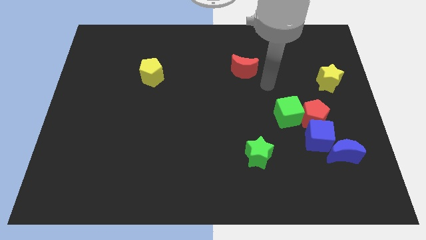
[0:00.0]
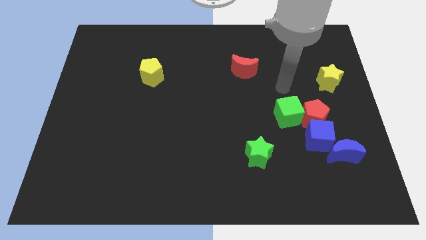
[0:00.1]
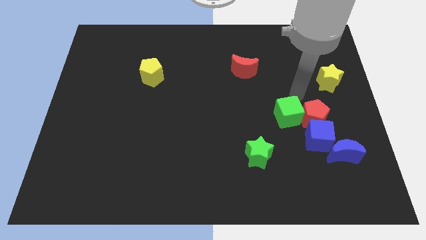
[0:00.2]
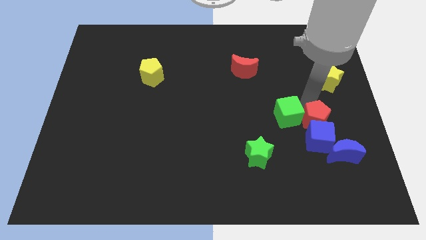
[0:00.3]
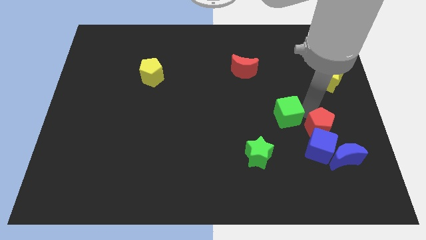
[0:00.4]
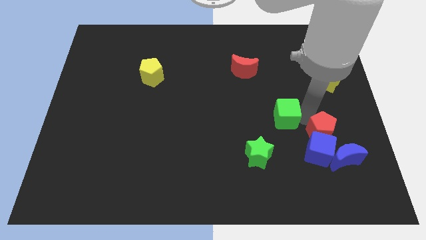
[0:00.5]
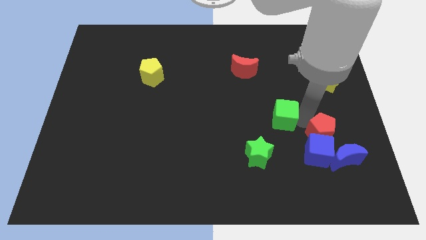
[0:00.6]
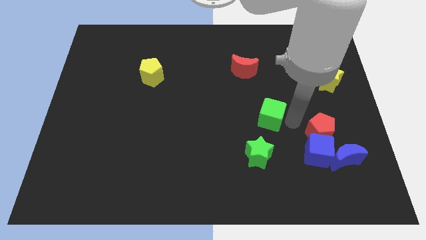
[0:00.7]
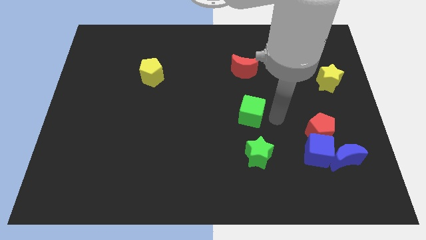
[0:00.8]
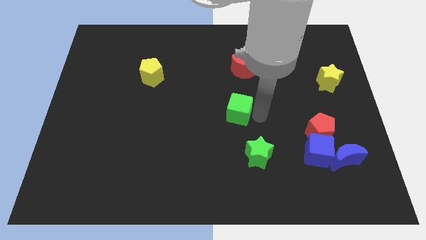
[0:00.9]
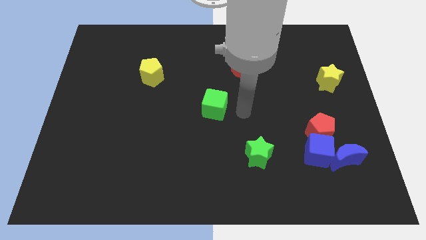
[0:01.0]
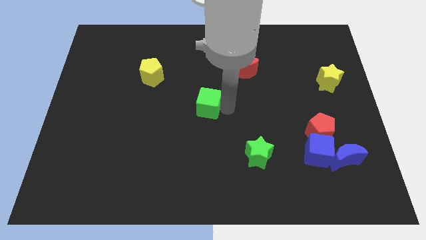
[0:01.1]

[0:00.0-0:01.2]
move the green cube to the left side of the board

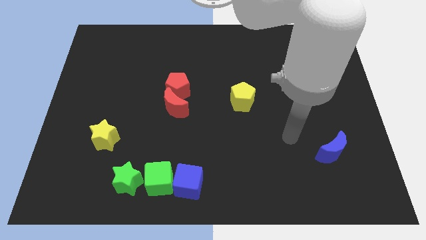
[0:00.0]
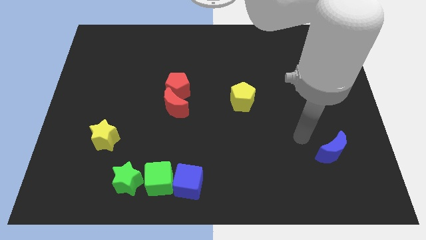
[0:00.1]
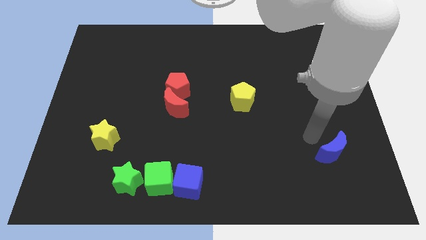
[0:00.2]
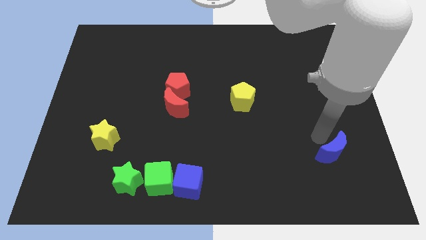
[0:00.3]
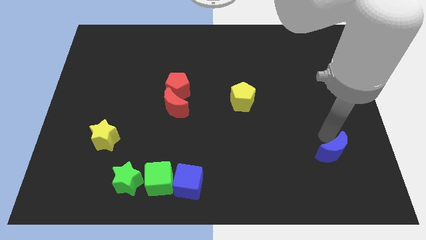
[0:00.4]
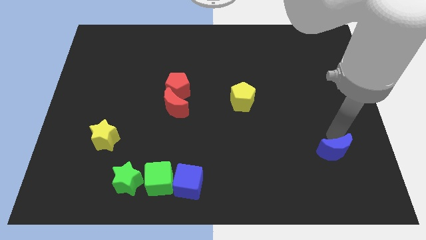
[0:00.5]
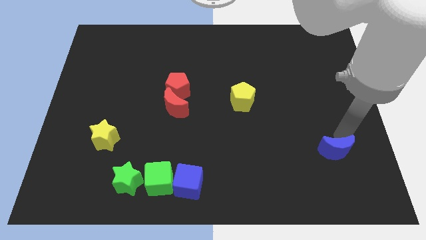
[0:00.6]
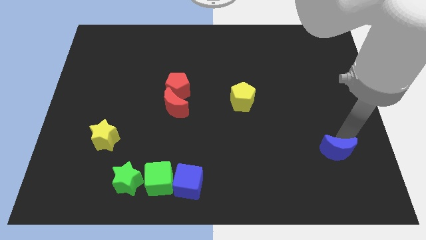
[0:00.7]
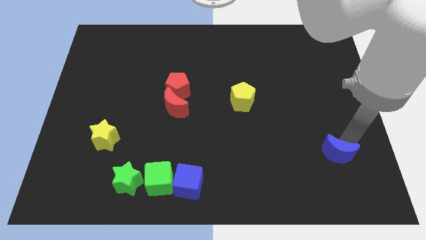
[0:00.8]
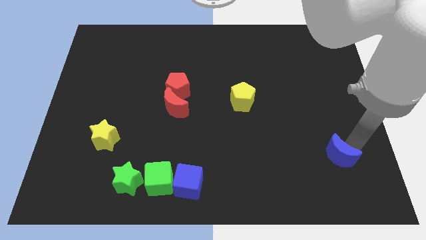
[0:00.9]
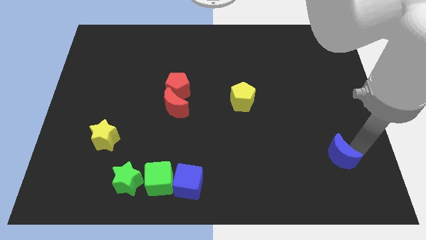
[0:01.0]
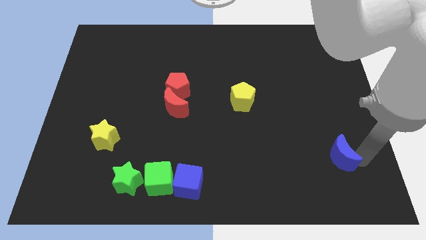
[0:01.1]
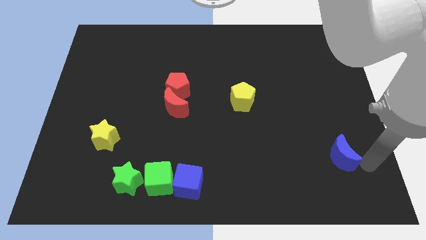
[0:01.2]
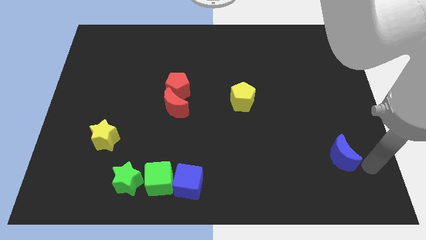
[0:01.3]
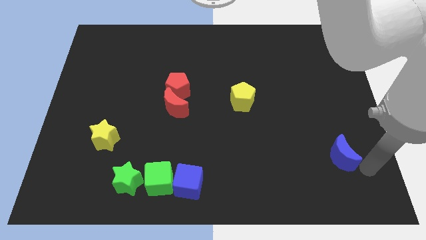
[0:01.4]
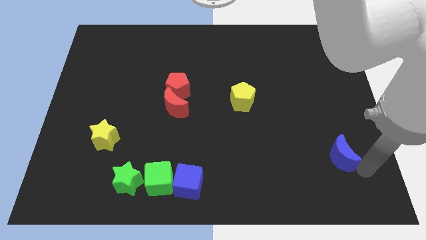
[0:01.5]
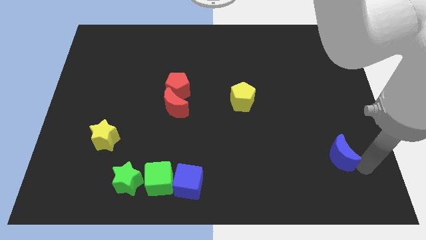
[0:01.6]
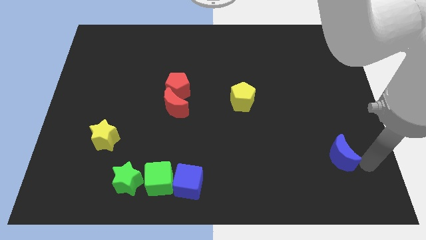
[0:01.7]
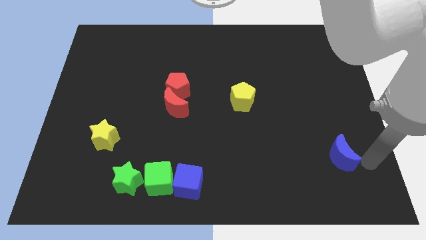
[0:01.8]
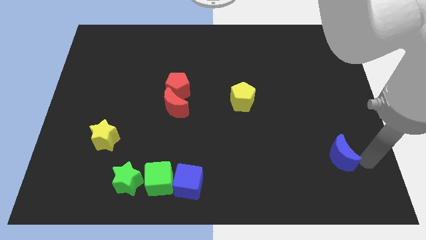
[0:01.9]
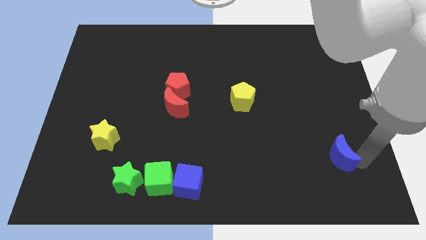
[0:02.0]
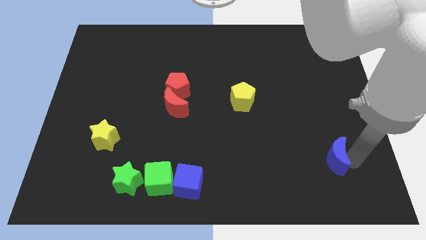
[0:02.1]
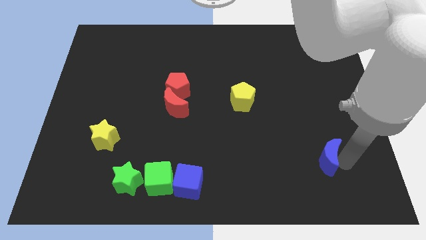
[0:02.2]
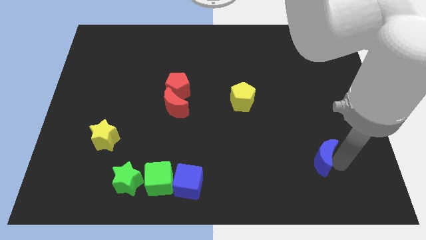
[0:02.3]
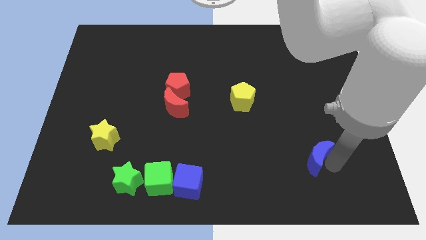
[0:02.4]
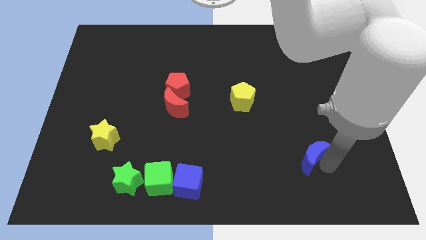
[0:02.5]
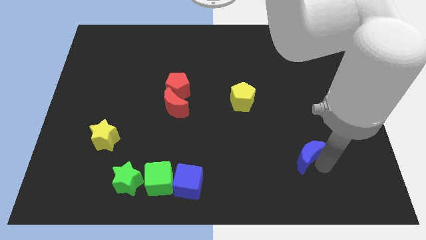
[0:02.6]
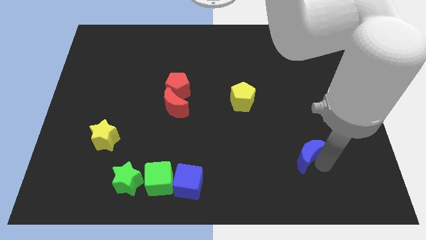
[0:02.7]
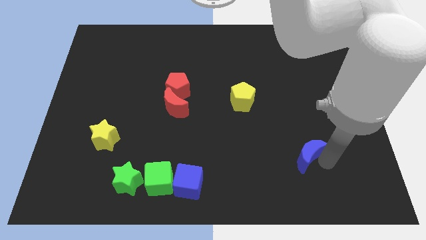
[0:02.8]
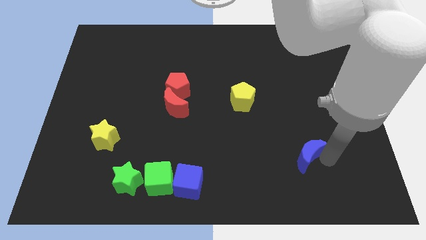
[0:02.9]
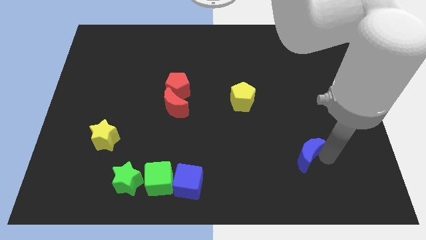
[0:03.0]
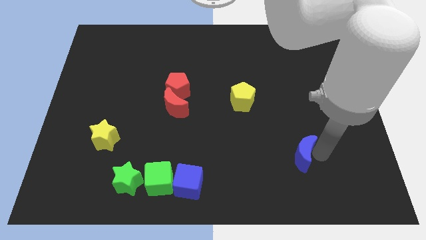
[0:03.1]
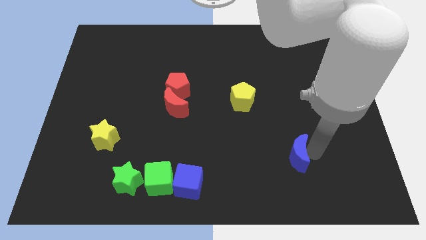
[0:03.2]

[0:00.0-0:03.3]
drag the blue moon towards the bottom center of the board

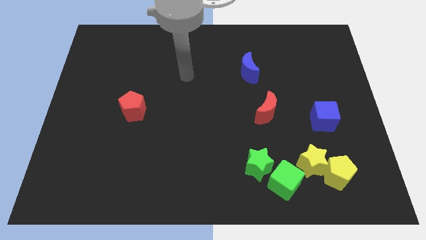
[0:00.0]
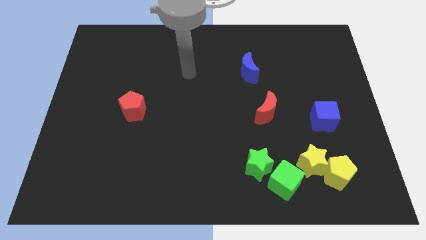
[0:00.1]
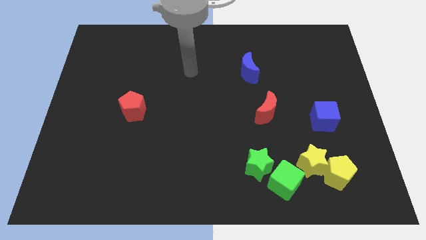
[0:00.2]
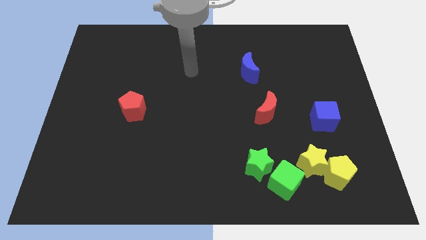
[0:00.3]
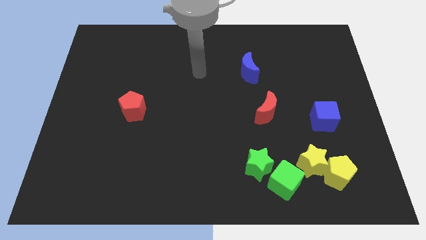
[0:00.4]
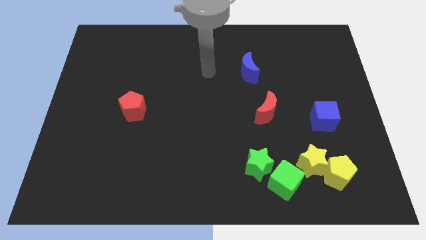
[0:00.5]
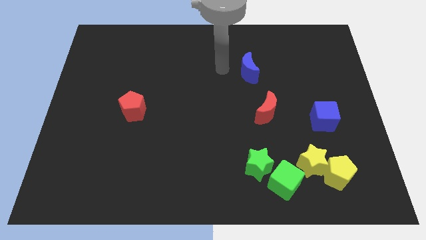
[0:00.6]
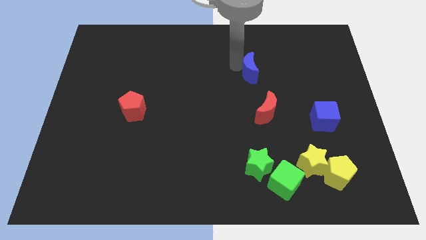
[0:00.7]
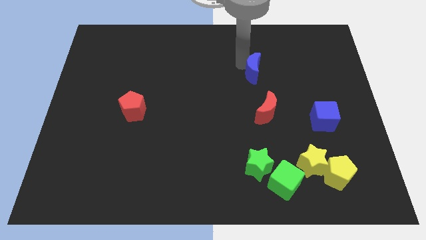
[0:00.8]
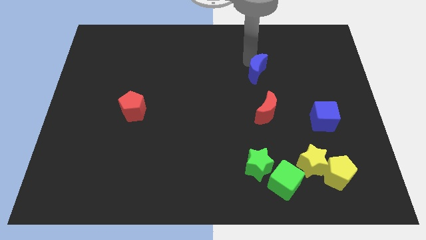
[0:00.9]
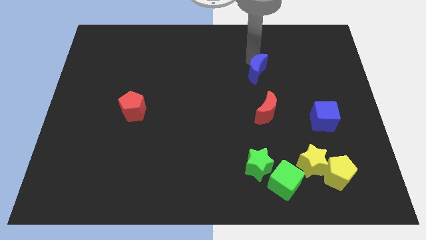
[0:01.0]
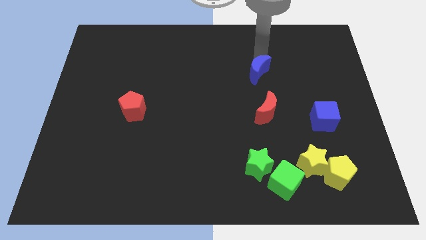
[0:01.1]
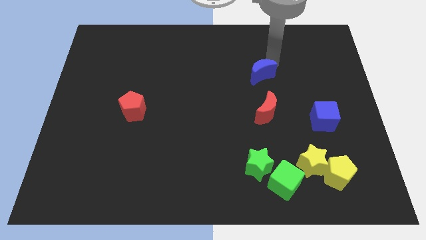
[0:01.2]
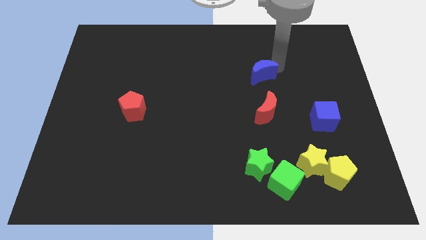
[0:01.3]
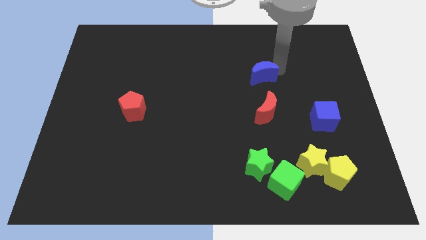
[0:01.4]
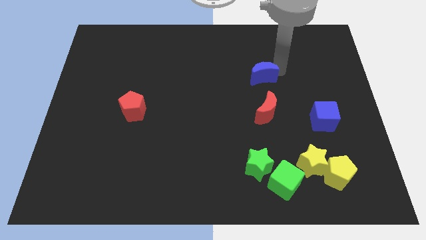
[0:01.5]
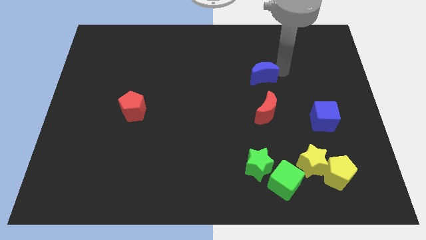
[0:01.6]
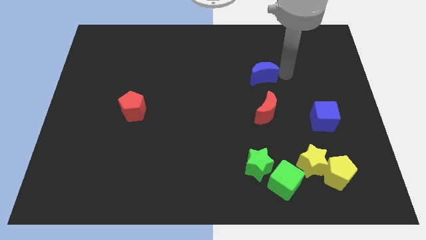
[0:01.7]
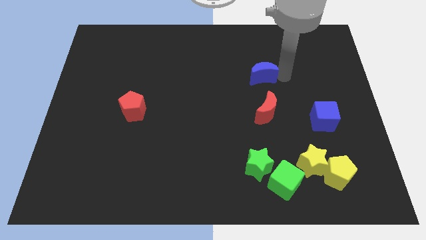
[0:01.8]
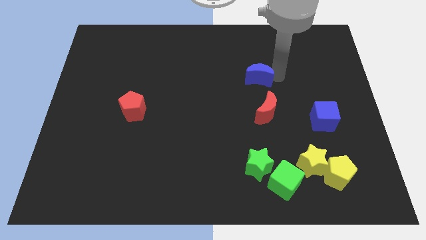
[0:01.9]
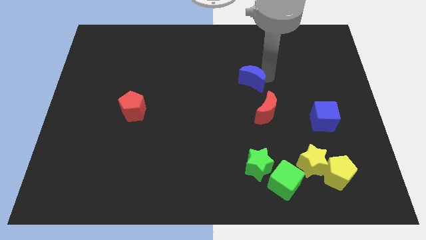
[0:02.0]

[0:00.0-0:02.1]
push the blue crescent slightly towards the bottom

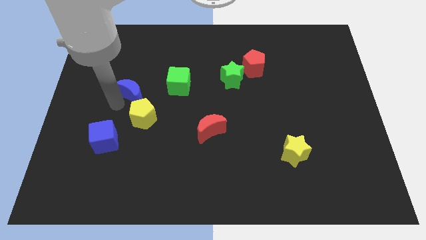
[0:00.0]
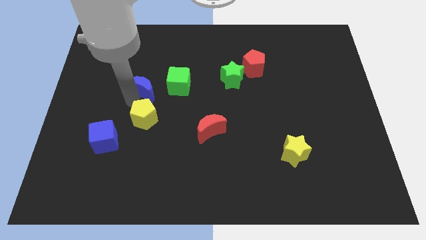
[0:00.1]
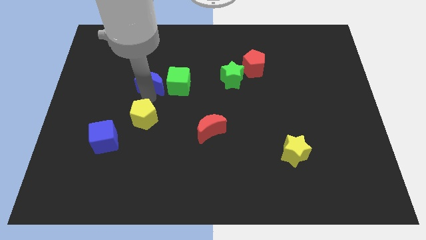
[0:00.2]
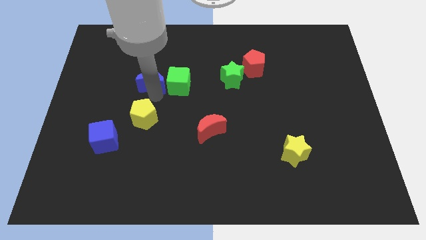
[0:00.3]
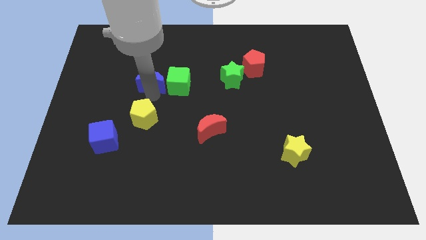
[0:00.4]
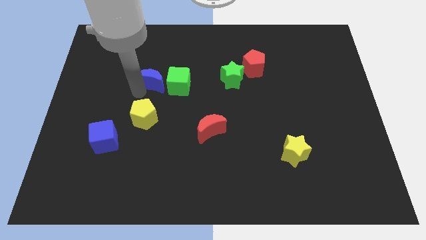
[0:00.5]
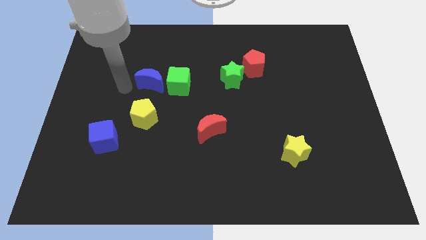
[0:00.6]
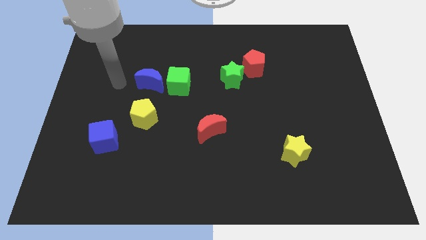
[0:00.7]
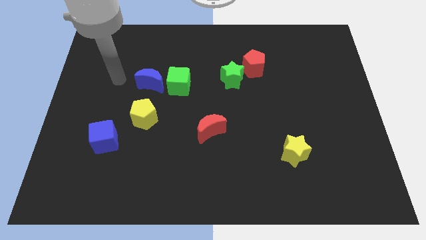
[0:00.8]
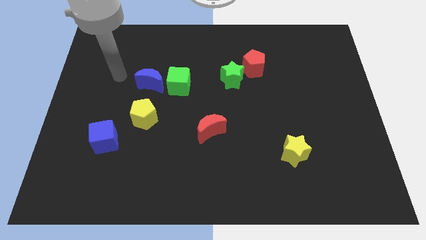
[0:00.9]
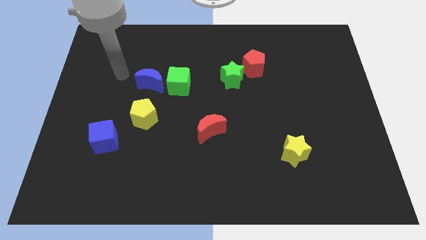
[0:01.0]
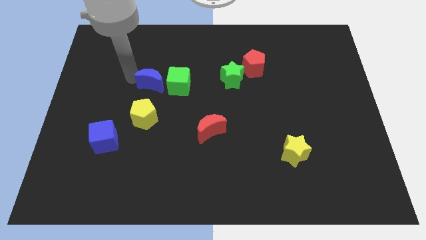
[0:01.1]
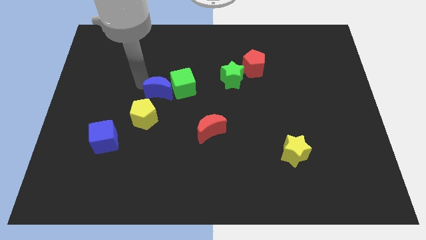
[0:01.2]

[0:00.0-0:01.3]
move the blue crescent to the left side of the green cube

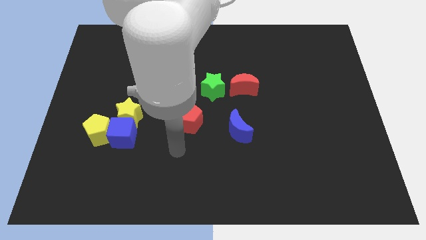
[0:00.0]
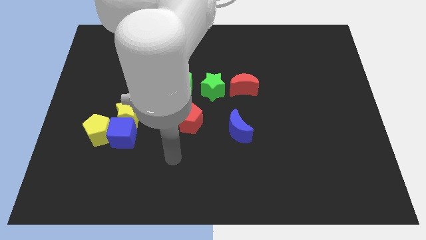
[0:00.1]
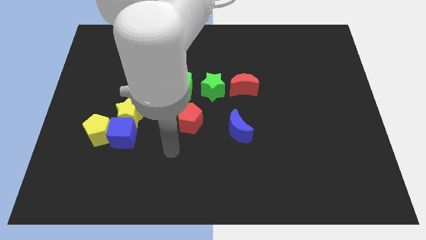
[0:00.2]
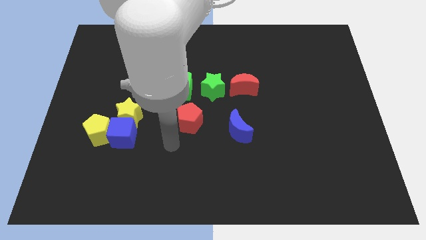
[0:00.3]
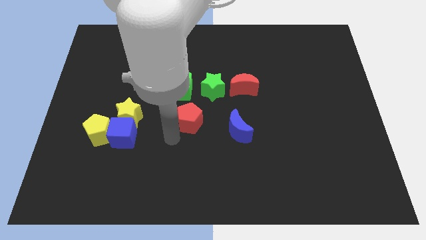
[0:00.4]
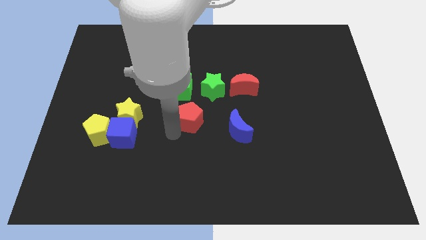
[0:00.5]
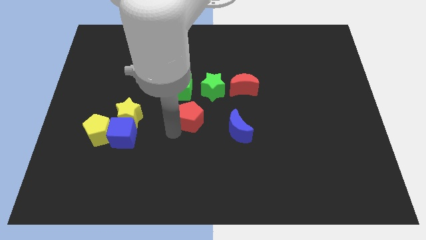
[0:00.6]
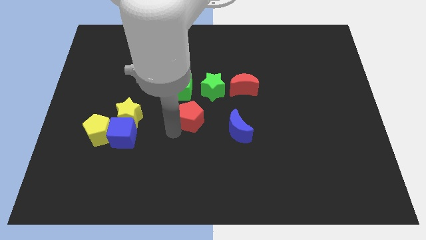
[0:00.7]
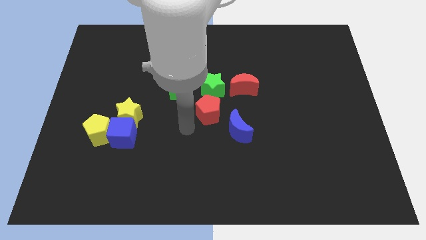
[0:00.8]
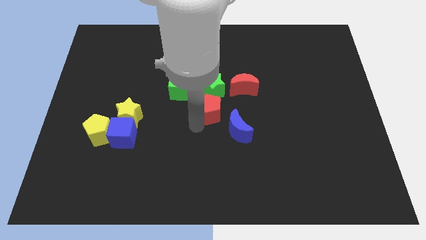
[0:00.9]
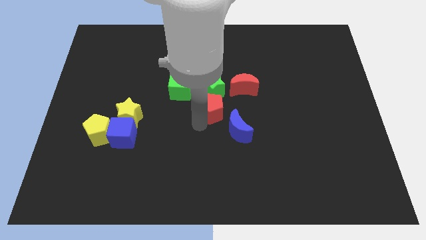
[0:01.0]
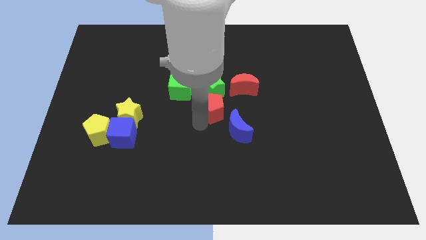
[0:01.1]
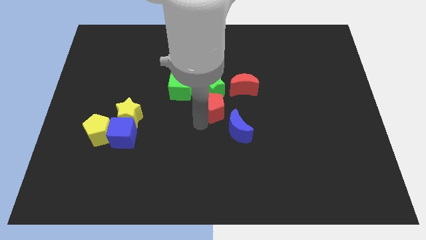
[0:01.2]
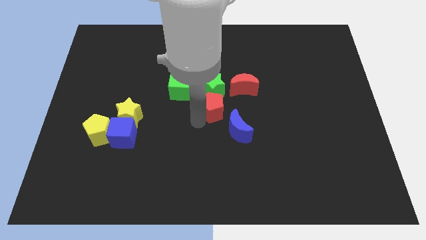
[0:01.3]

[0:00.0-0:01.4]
put the red pentagon at the bottom of the green star
